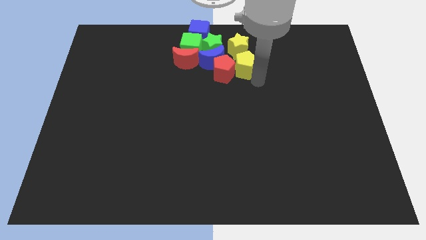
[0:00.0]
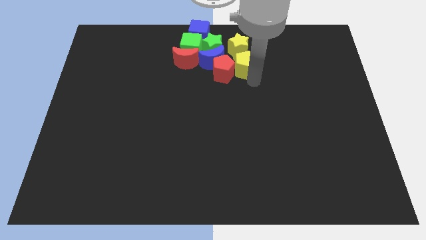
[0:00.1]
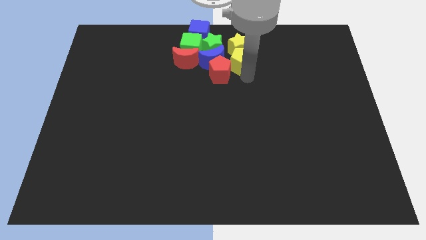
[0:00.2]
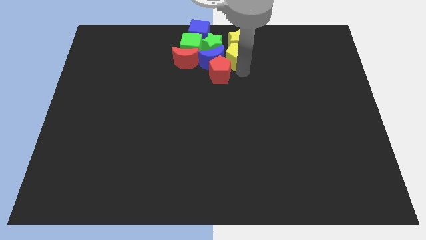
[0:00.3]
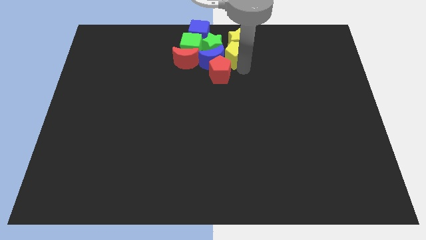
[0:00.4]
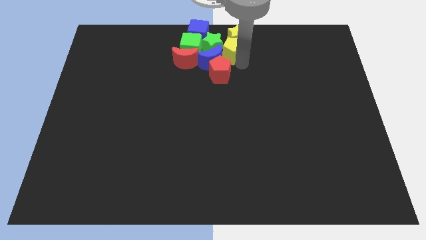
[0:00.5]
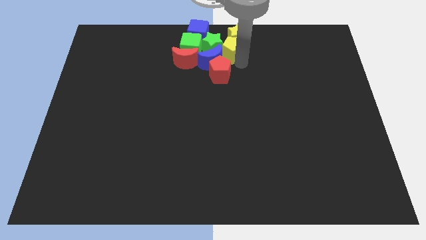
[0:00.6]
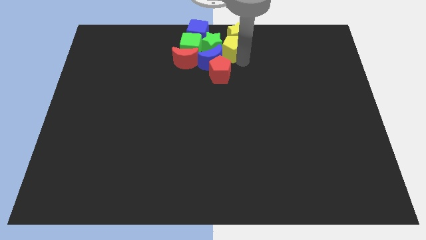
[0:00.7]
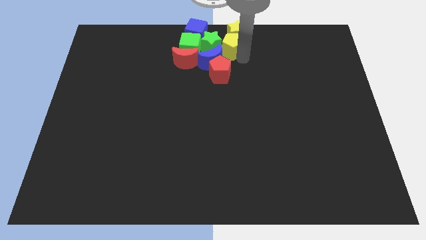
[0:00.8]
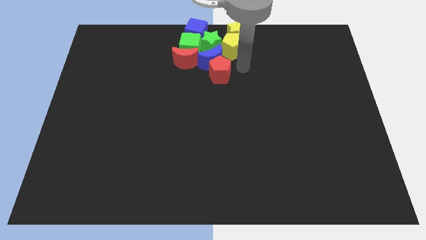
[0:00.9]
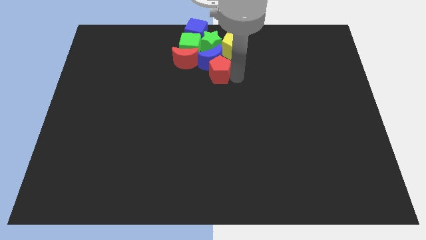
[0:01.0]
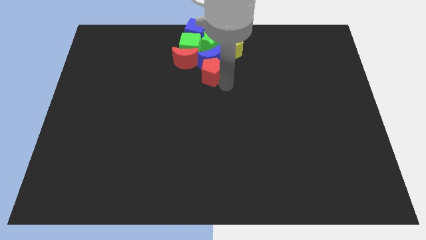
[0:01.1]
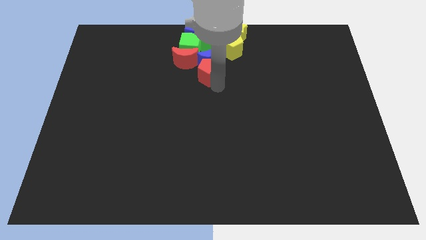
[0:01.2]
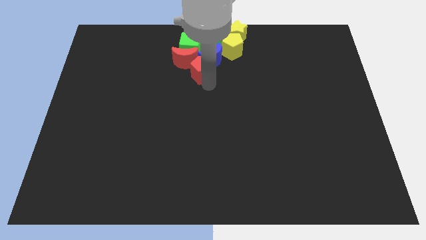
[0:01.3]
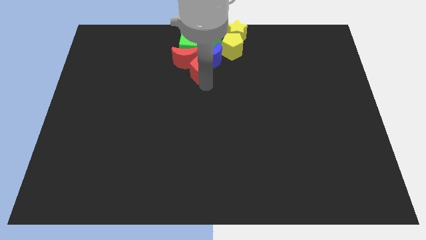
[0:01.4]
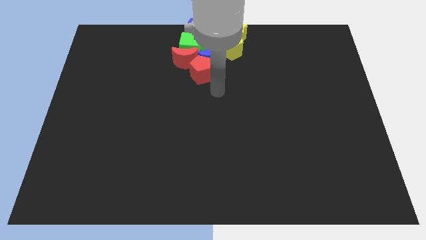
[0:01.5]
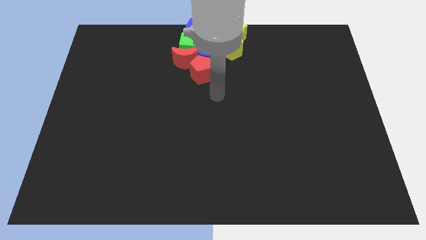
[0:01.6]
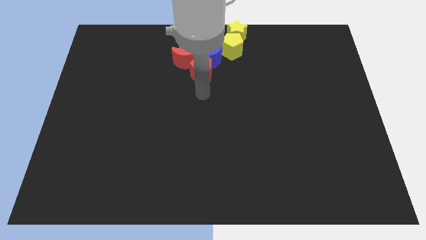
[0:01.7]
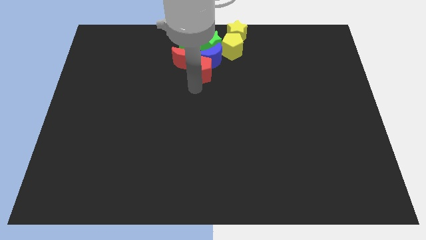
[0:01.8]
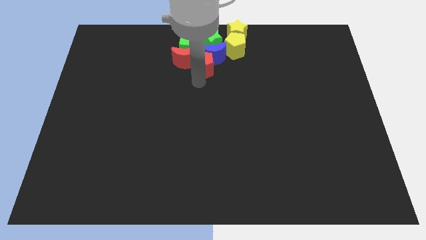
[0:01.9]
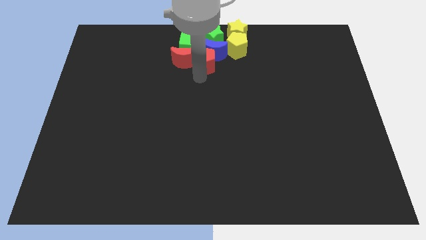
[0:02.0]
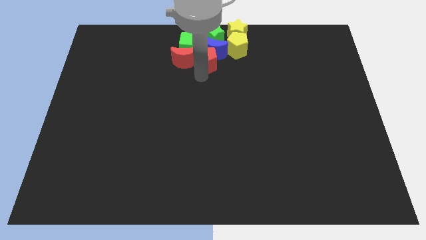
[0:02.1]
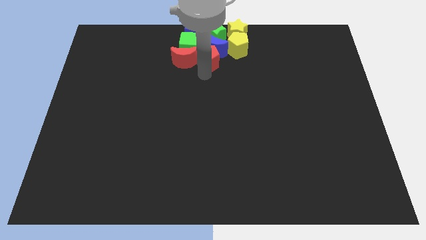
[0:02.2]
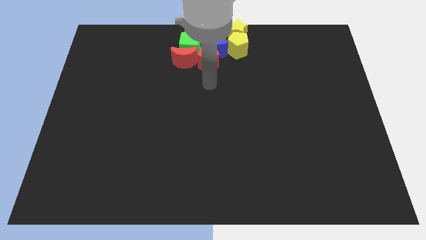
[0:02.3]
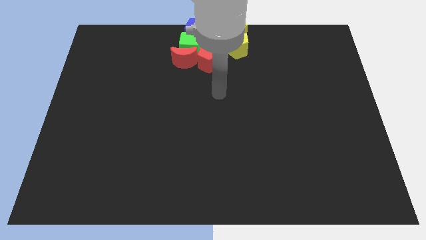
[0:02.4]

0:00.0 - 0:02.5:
push the yellow pentagon and yellow star at the top and red pentagon into the blue moon

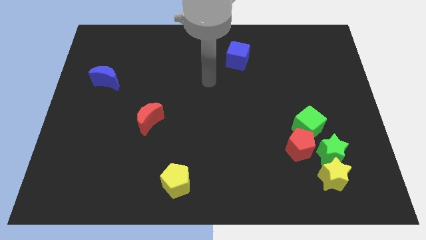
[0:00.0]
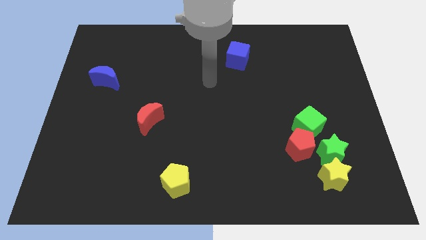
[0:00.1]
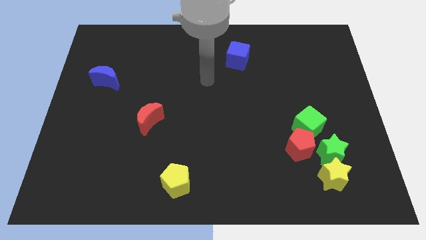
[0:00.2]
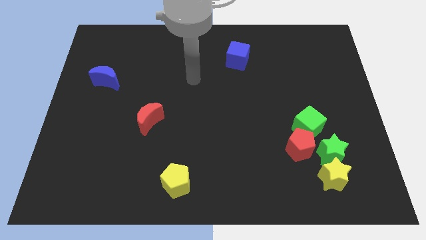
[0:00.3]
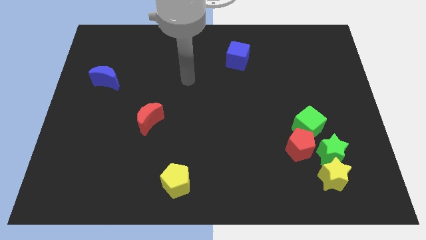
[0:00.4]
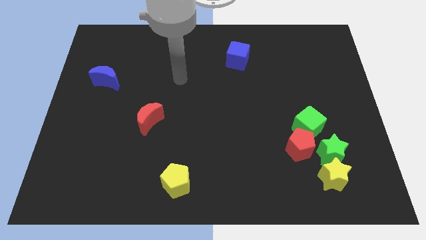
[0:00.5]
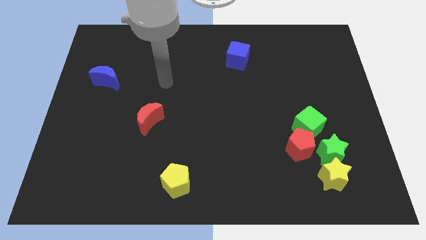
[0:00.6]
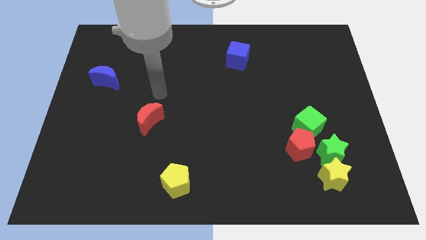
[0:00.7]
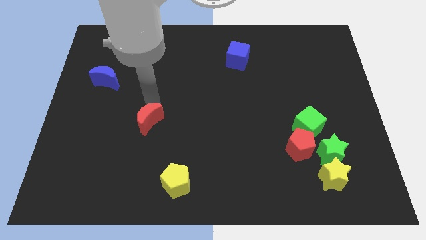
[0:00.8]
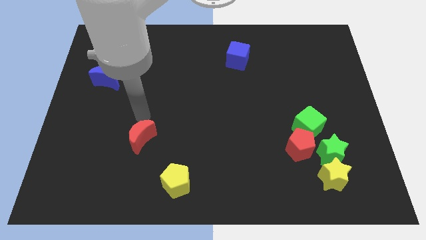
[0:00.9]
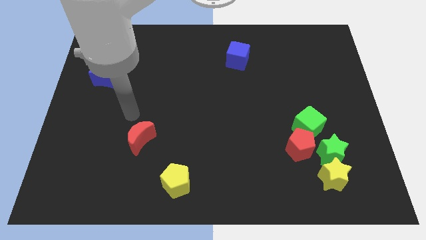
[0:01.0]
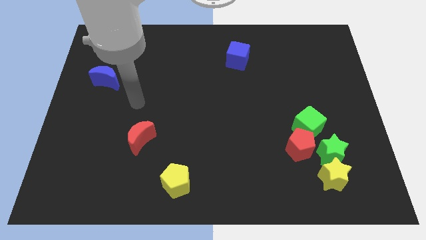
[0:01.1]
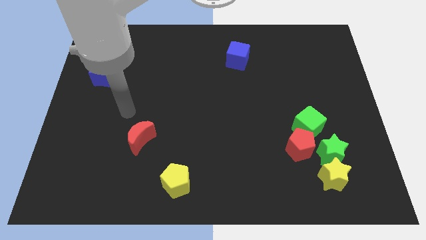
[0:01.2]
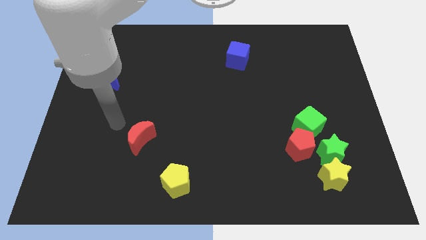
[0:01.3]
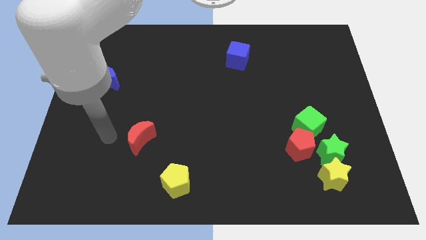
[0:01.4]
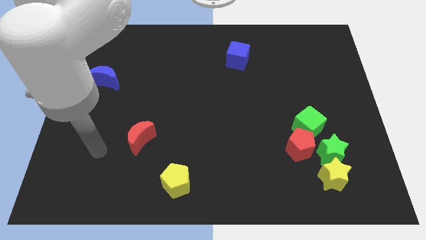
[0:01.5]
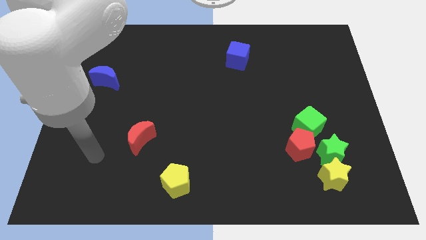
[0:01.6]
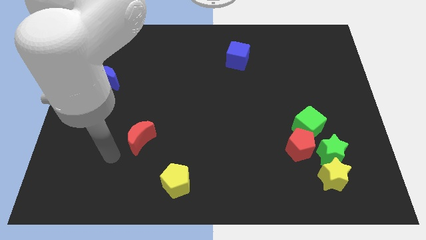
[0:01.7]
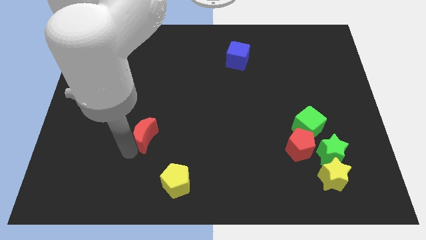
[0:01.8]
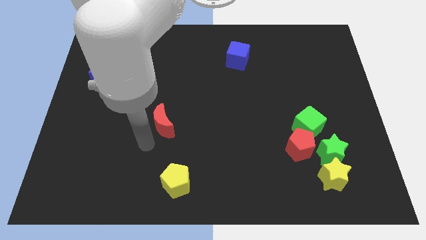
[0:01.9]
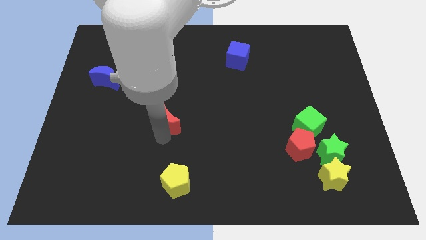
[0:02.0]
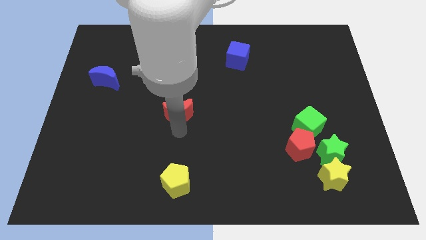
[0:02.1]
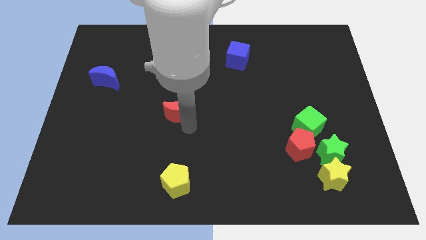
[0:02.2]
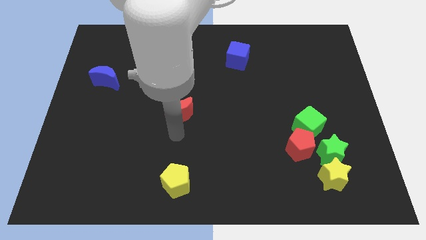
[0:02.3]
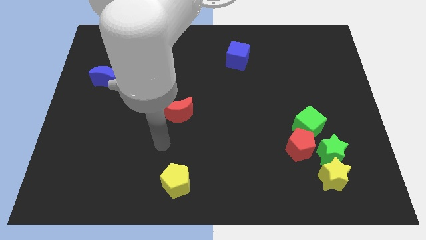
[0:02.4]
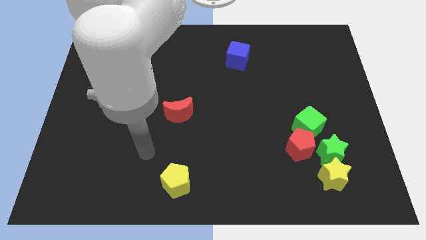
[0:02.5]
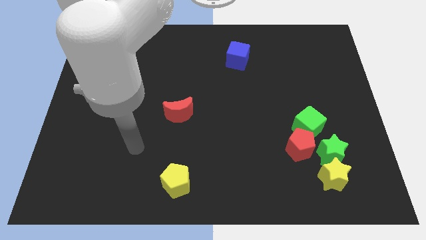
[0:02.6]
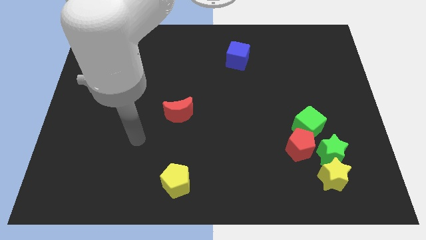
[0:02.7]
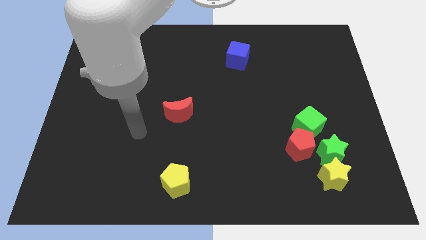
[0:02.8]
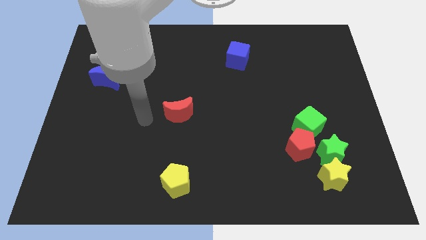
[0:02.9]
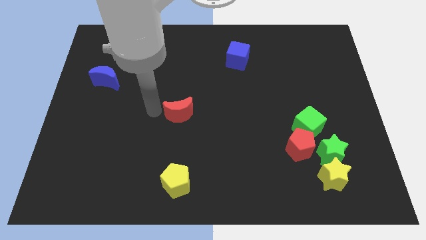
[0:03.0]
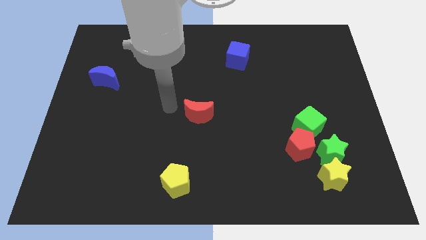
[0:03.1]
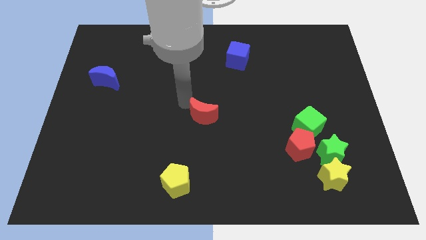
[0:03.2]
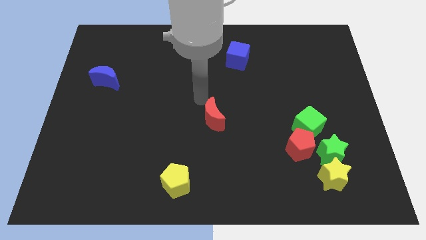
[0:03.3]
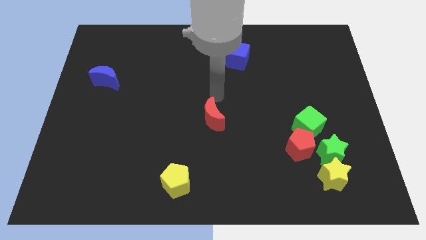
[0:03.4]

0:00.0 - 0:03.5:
place red moon to the center

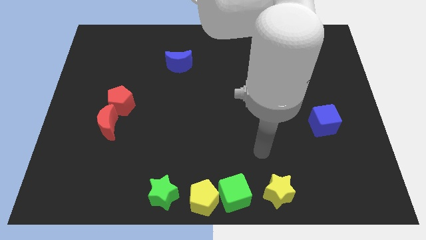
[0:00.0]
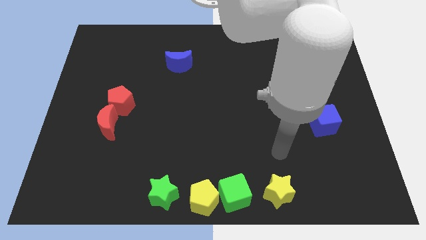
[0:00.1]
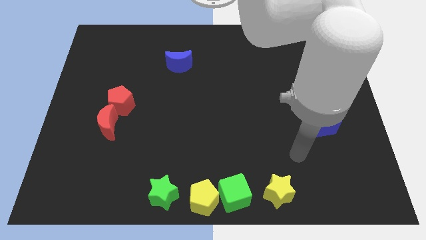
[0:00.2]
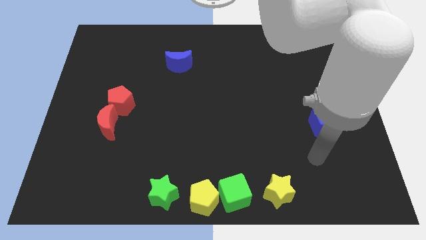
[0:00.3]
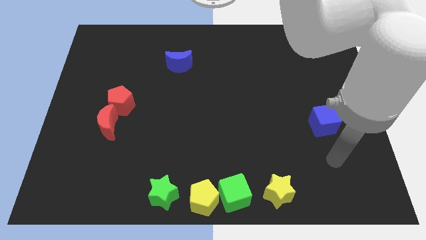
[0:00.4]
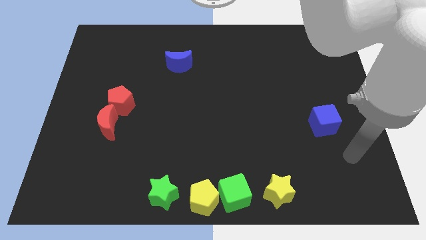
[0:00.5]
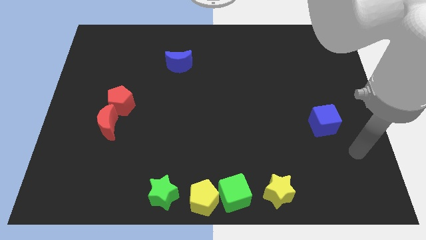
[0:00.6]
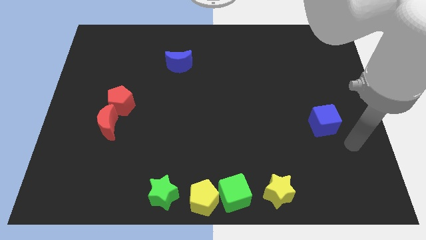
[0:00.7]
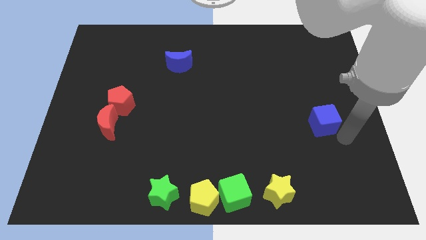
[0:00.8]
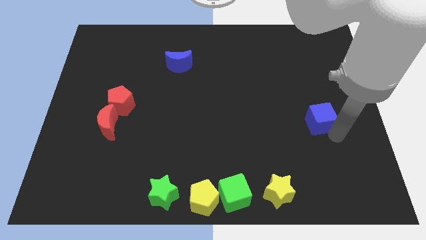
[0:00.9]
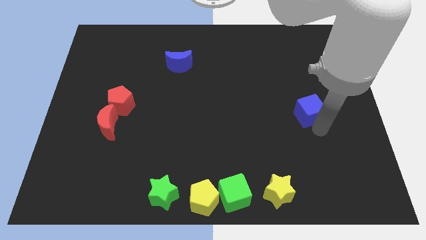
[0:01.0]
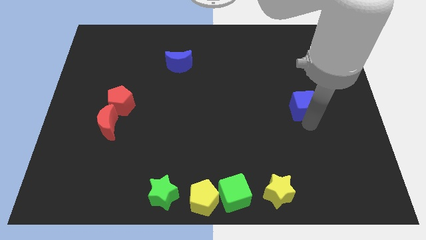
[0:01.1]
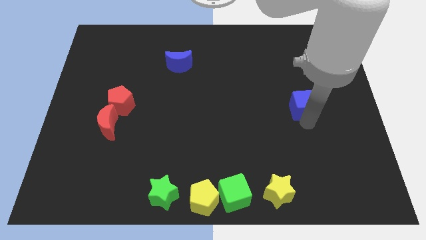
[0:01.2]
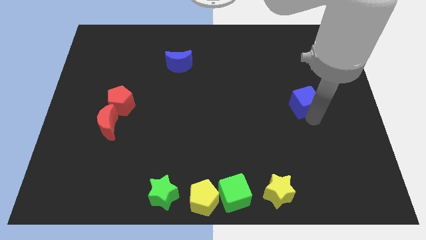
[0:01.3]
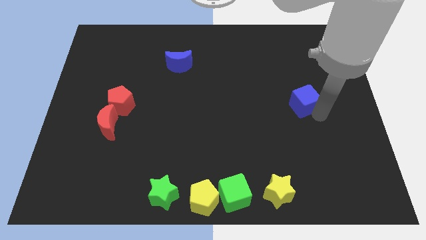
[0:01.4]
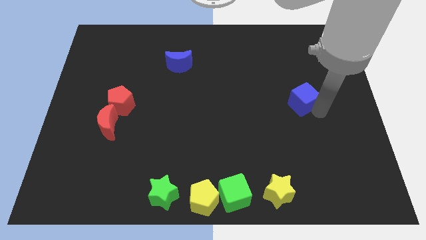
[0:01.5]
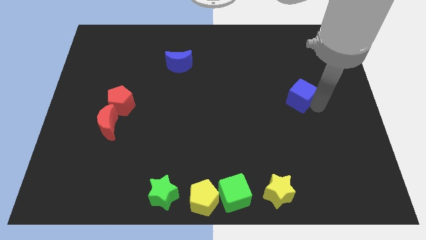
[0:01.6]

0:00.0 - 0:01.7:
push the blue cube upwards

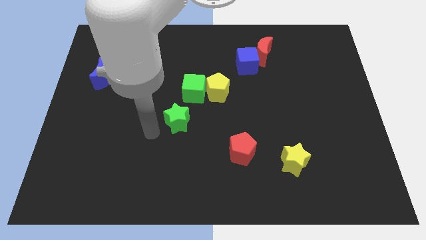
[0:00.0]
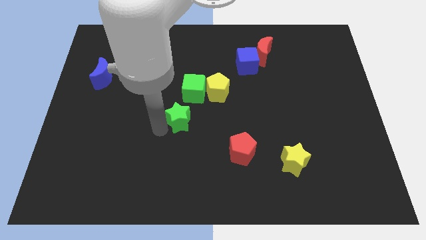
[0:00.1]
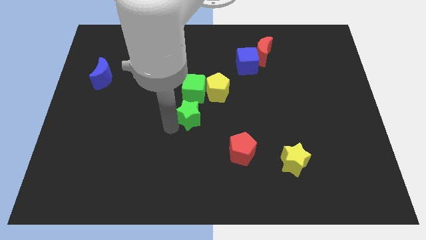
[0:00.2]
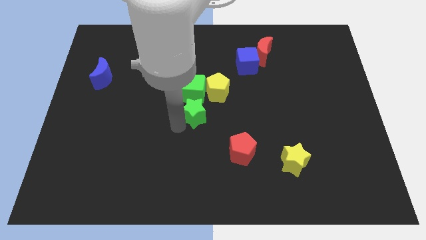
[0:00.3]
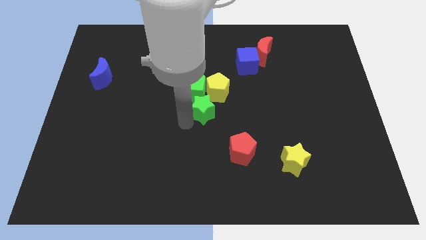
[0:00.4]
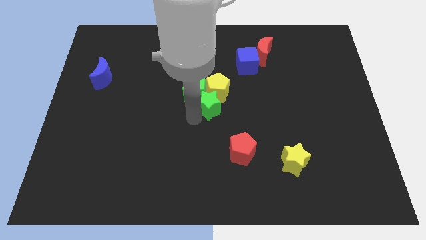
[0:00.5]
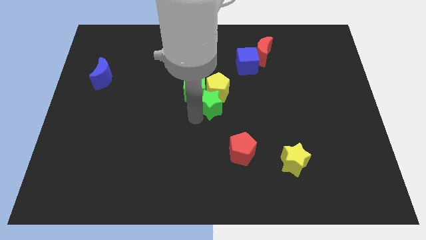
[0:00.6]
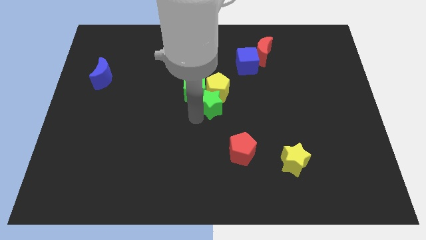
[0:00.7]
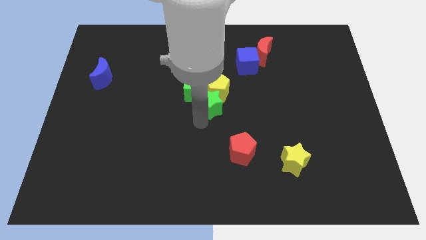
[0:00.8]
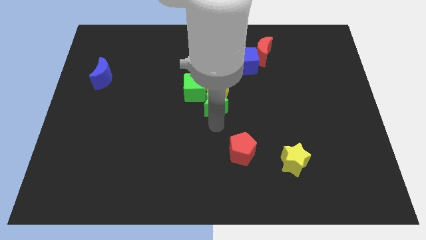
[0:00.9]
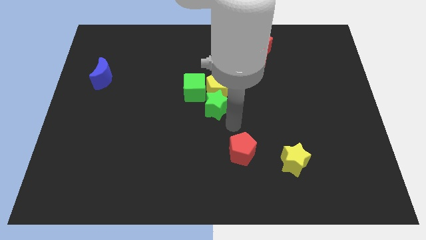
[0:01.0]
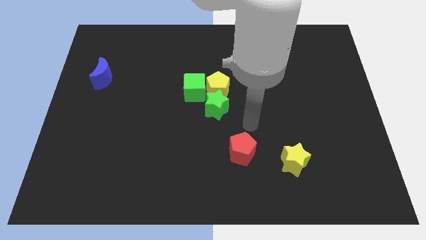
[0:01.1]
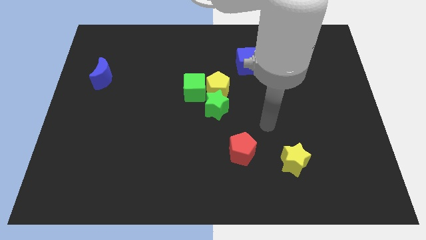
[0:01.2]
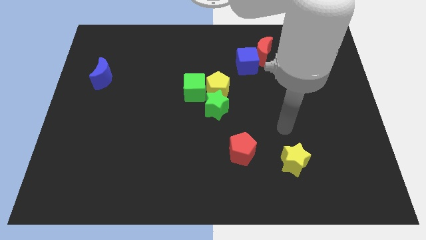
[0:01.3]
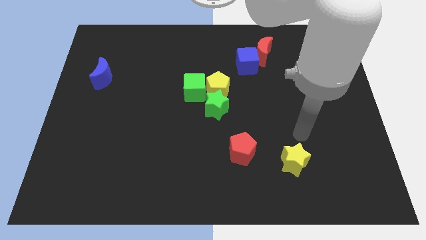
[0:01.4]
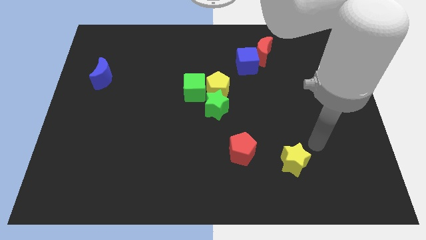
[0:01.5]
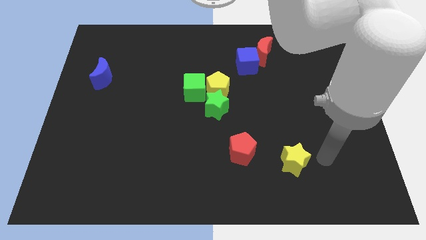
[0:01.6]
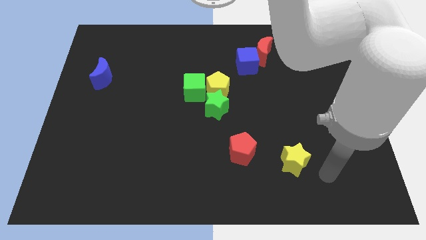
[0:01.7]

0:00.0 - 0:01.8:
put the green star underneath the yellow pentagon
